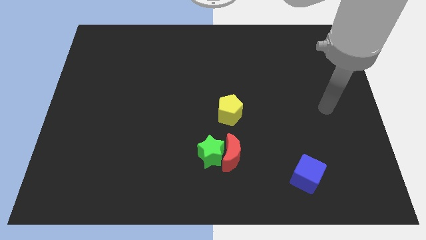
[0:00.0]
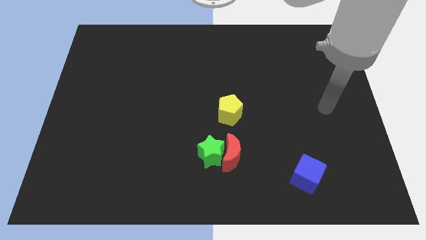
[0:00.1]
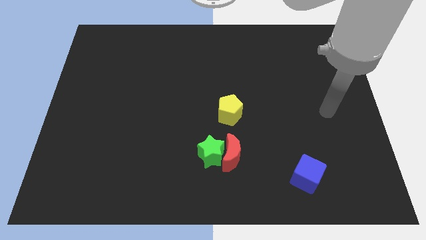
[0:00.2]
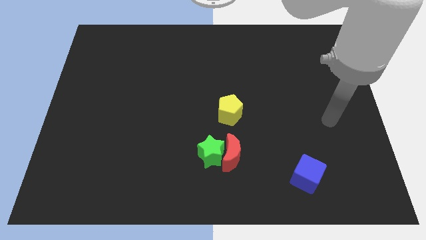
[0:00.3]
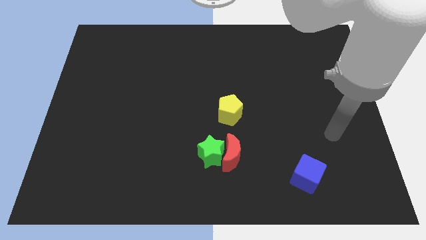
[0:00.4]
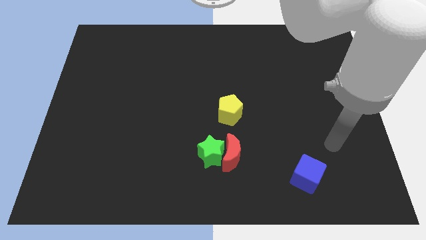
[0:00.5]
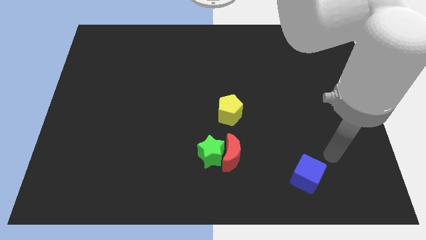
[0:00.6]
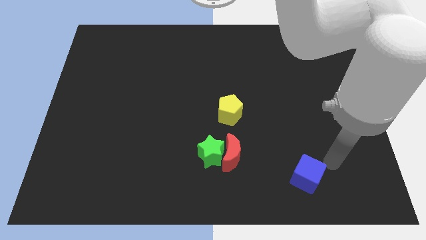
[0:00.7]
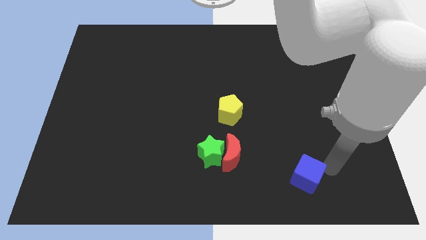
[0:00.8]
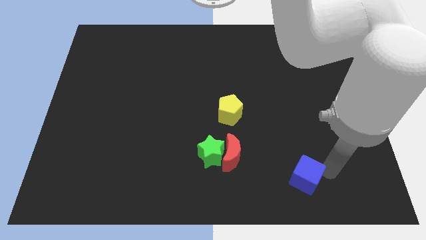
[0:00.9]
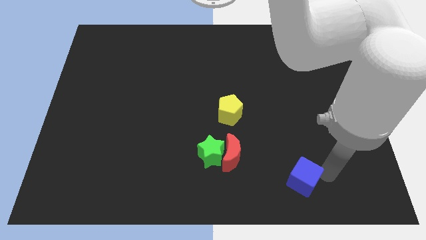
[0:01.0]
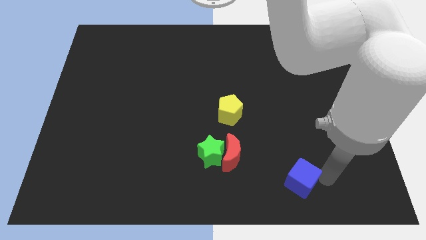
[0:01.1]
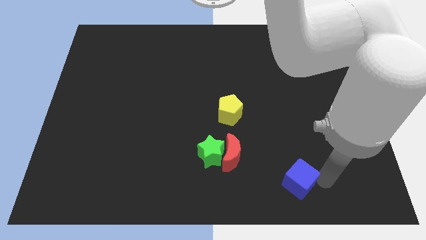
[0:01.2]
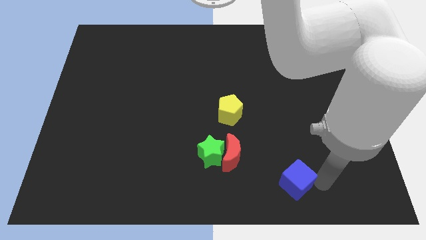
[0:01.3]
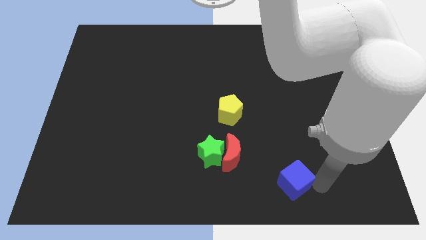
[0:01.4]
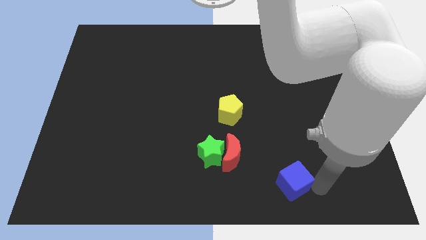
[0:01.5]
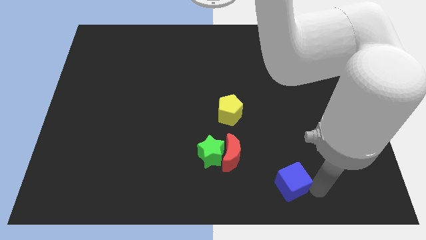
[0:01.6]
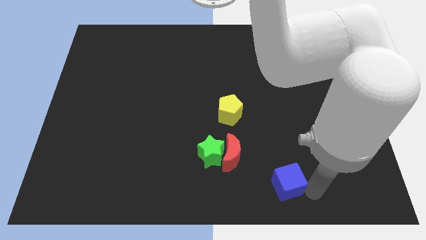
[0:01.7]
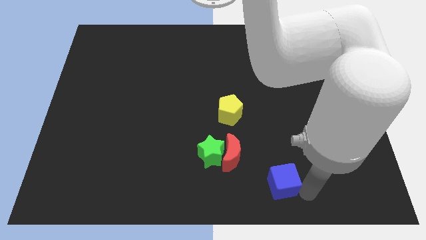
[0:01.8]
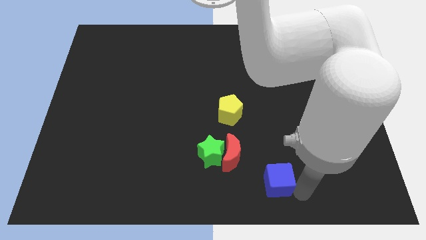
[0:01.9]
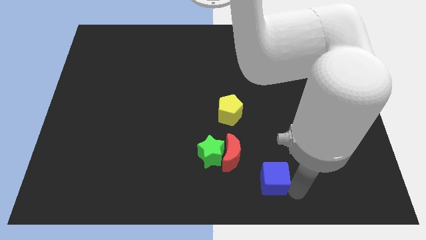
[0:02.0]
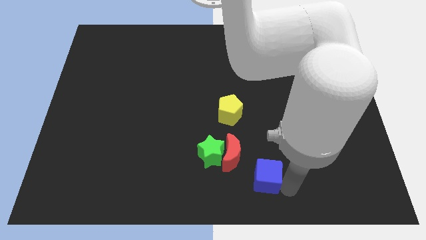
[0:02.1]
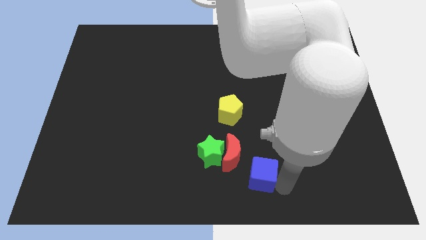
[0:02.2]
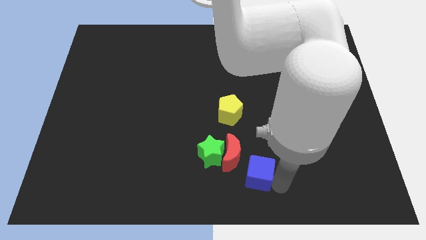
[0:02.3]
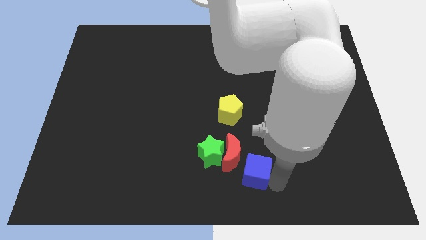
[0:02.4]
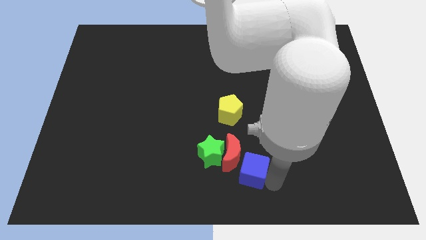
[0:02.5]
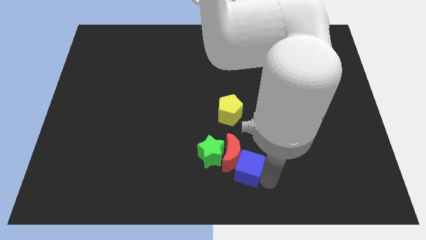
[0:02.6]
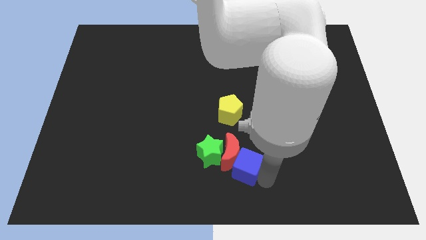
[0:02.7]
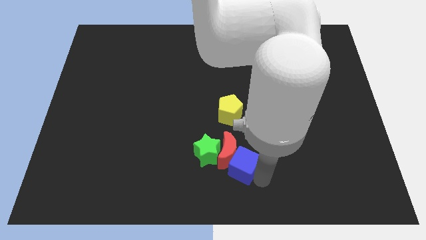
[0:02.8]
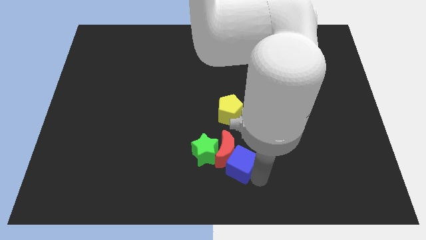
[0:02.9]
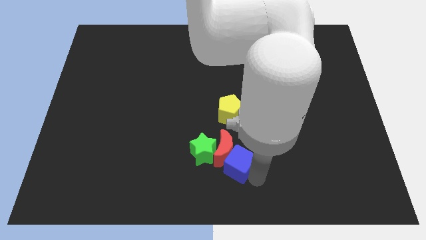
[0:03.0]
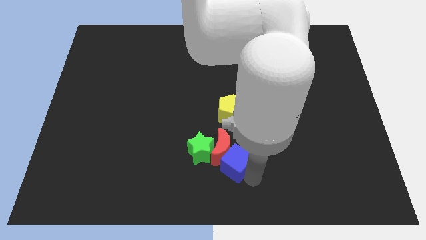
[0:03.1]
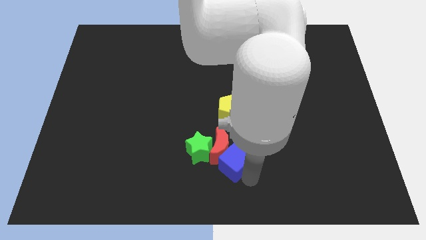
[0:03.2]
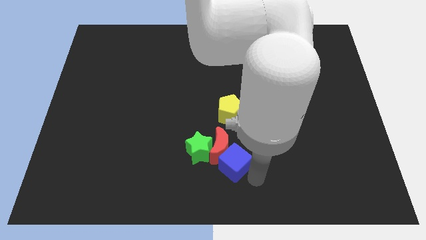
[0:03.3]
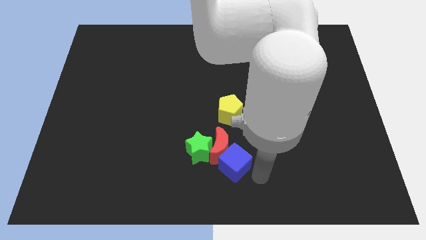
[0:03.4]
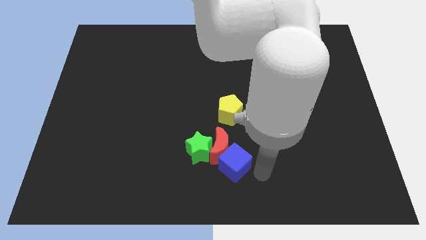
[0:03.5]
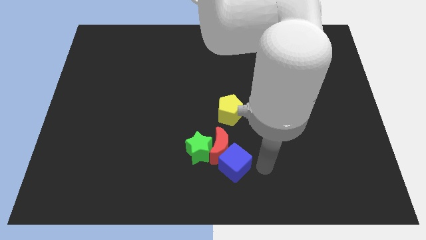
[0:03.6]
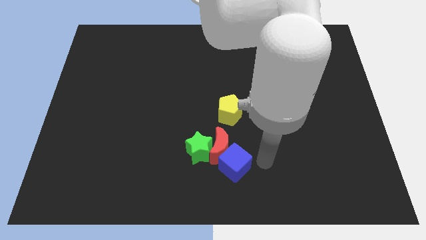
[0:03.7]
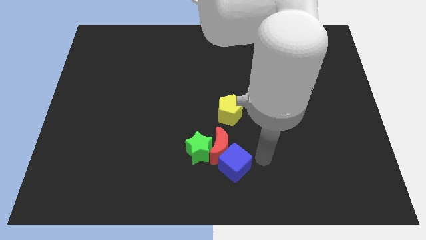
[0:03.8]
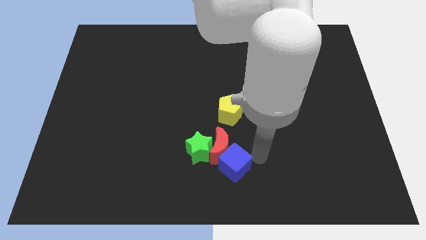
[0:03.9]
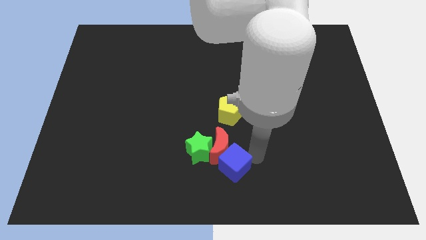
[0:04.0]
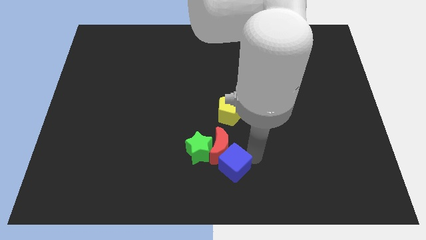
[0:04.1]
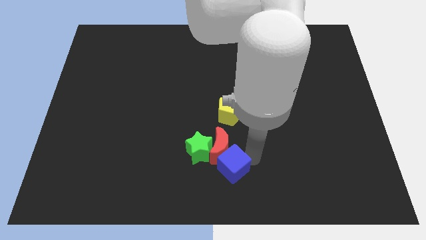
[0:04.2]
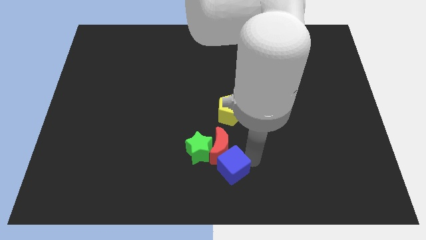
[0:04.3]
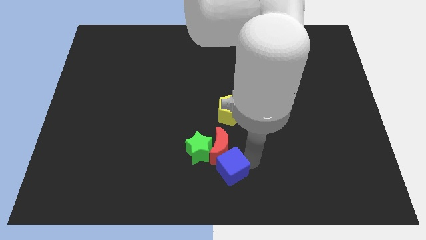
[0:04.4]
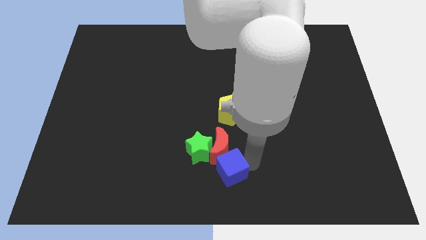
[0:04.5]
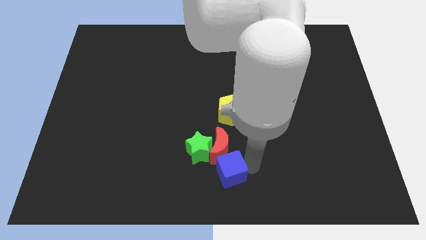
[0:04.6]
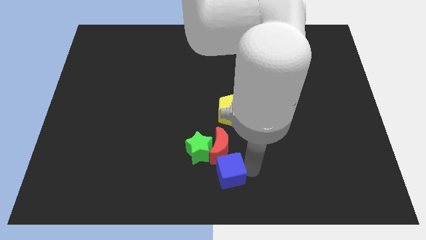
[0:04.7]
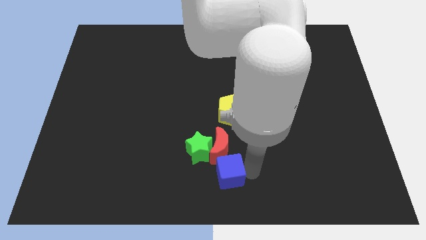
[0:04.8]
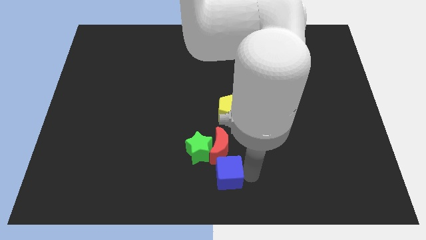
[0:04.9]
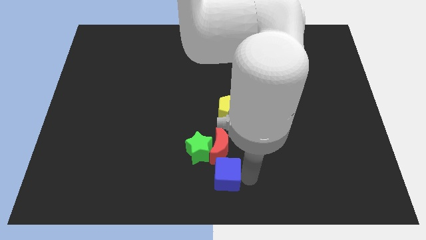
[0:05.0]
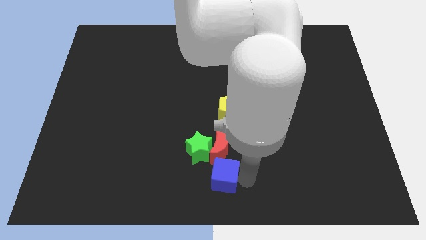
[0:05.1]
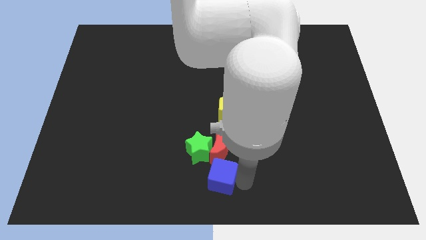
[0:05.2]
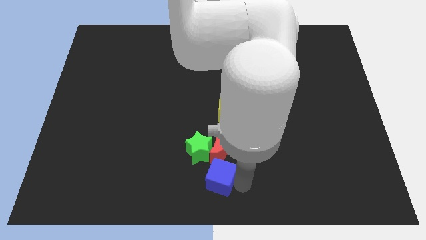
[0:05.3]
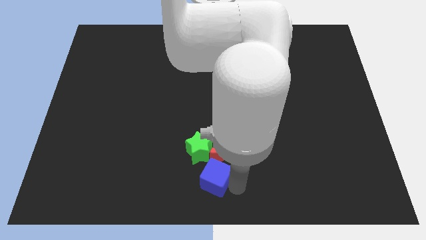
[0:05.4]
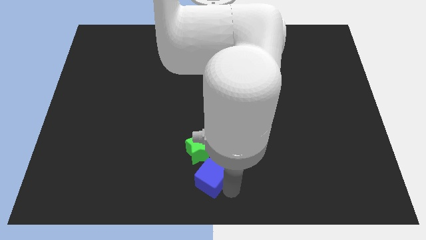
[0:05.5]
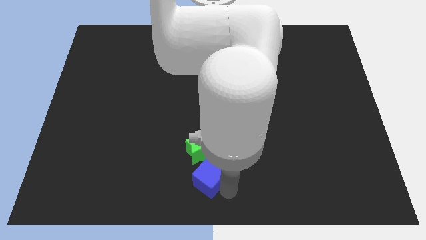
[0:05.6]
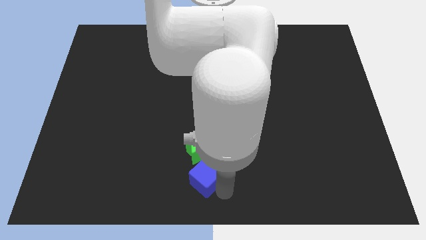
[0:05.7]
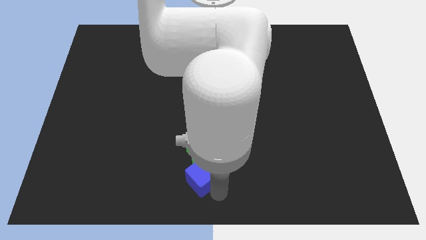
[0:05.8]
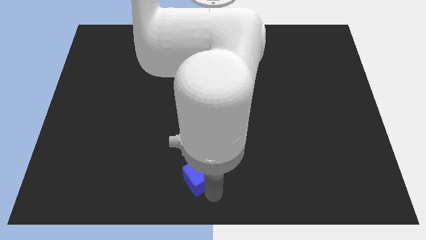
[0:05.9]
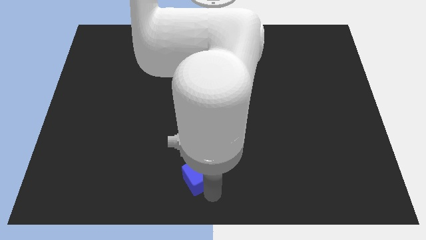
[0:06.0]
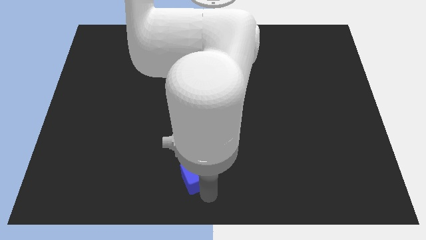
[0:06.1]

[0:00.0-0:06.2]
push the blue block close to the green block

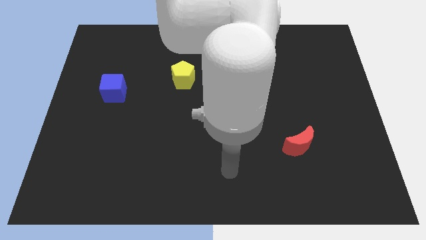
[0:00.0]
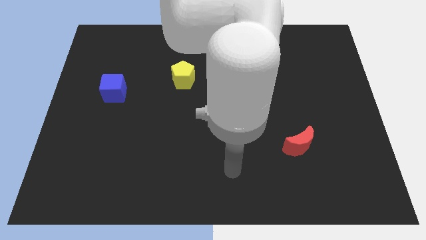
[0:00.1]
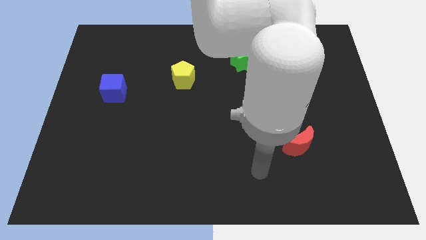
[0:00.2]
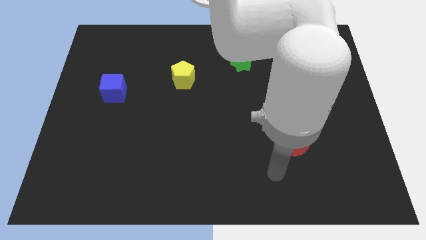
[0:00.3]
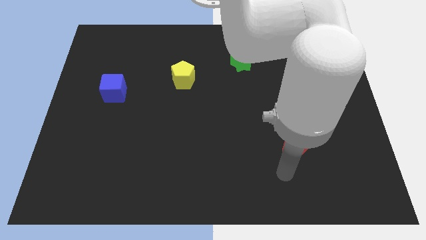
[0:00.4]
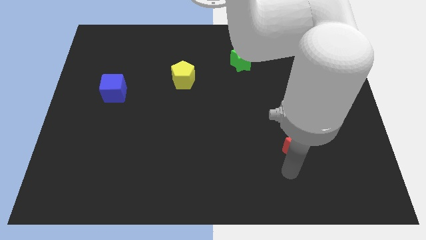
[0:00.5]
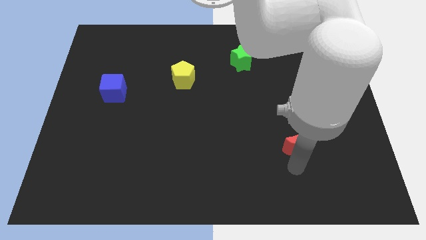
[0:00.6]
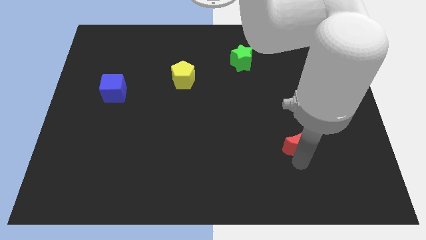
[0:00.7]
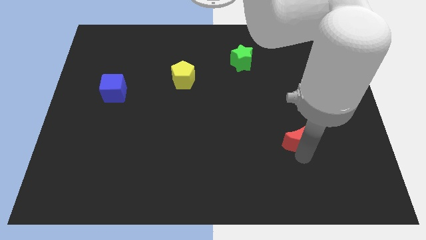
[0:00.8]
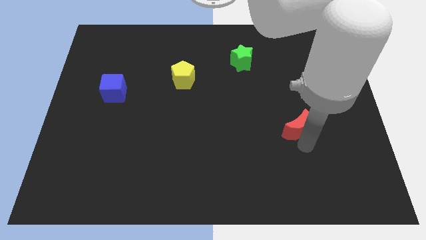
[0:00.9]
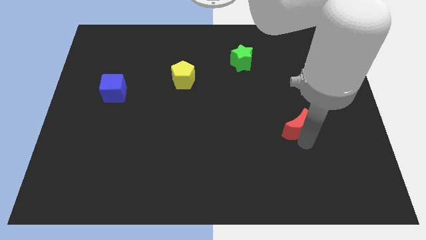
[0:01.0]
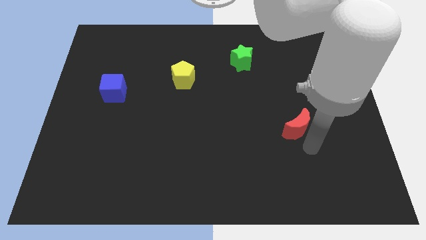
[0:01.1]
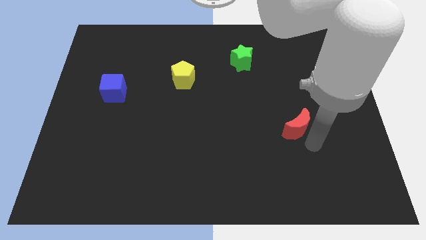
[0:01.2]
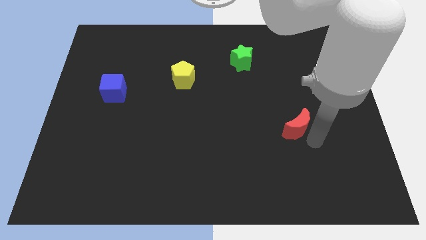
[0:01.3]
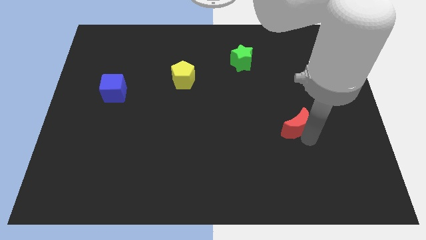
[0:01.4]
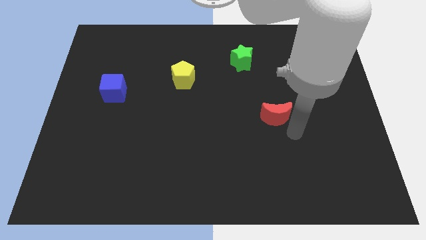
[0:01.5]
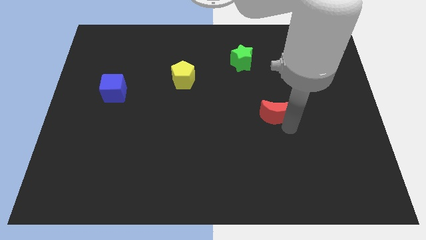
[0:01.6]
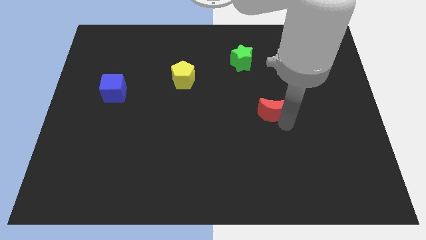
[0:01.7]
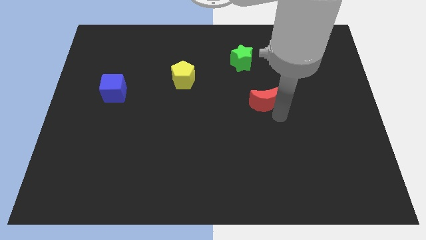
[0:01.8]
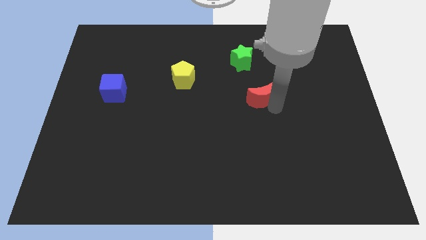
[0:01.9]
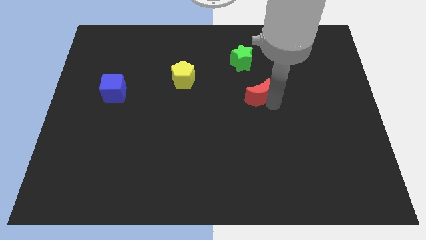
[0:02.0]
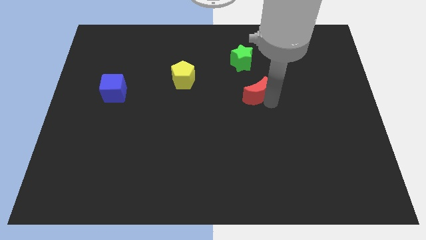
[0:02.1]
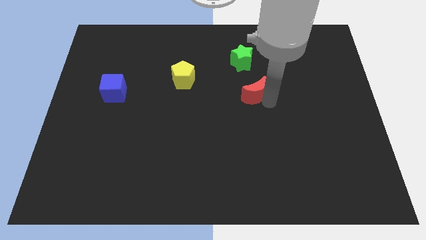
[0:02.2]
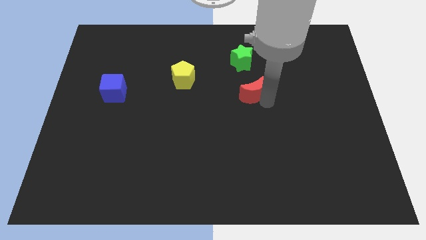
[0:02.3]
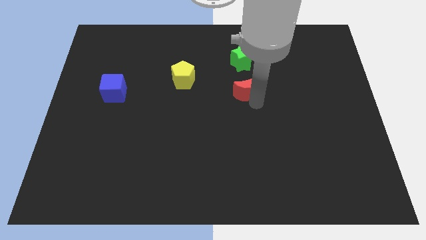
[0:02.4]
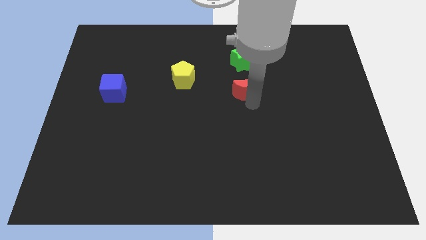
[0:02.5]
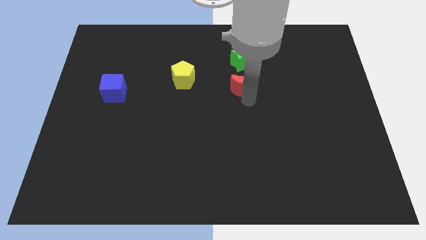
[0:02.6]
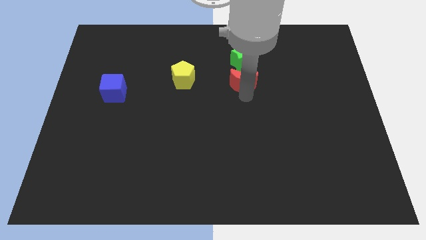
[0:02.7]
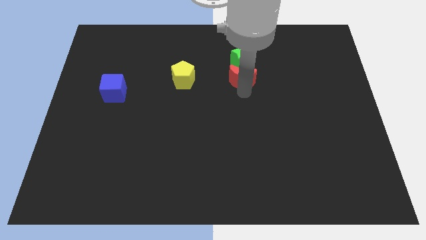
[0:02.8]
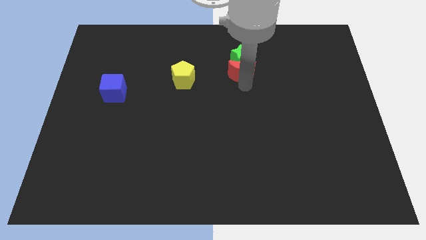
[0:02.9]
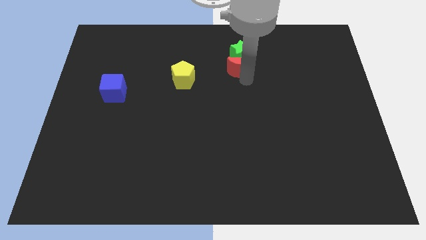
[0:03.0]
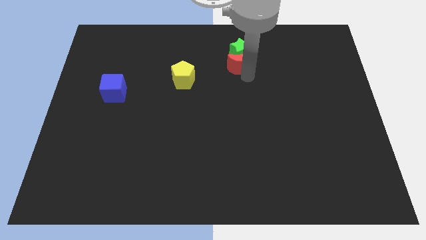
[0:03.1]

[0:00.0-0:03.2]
slide the moon next to the green block
